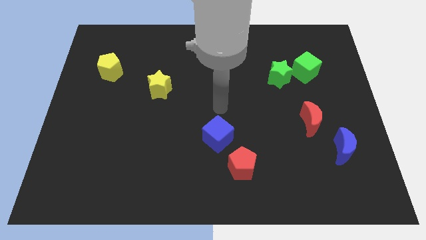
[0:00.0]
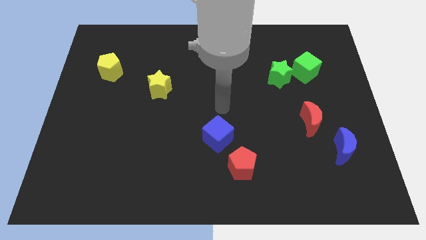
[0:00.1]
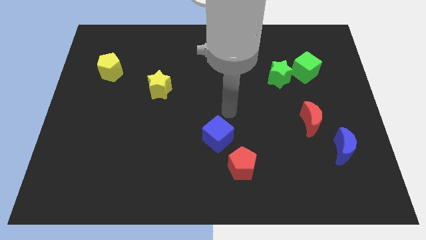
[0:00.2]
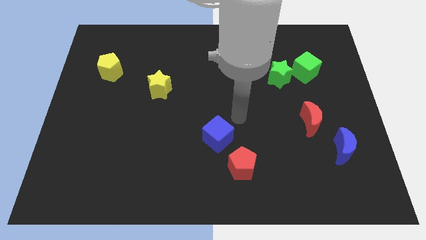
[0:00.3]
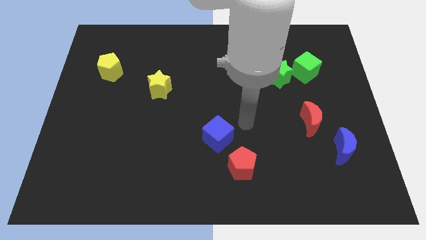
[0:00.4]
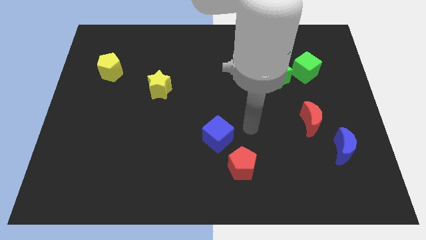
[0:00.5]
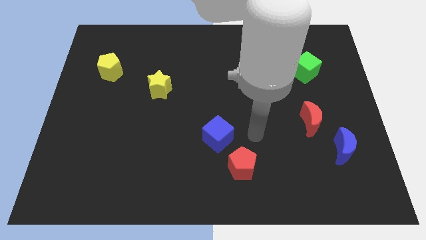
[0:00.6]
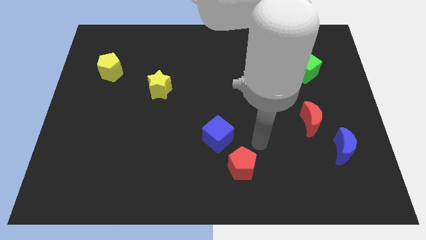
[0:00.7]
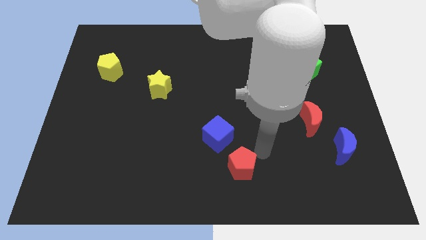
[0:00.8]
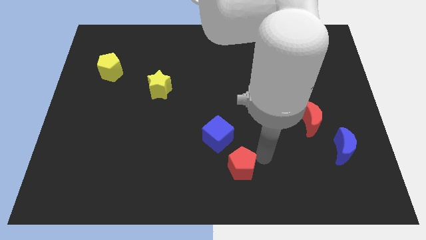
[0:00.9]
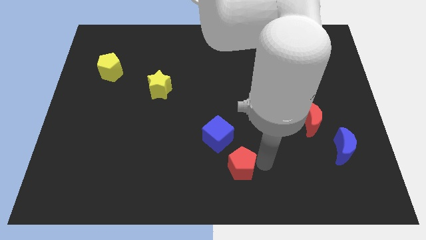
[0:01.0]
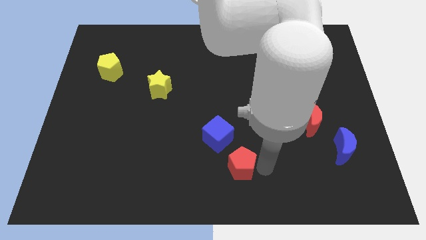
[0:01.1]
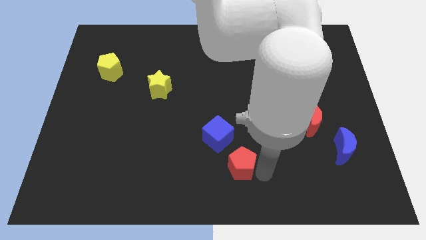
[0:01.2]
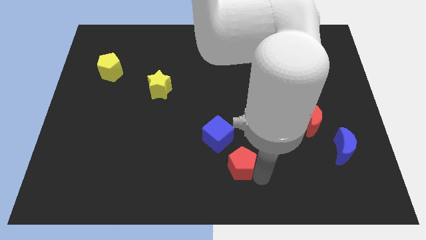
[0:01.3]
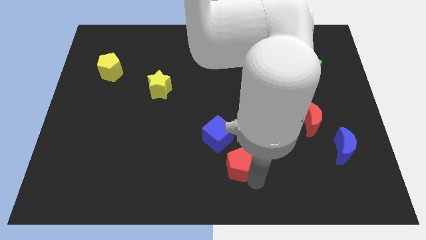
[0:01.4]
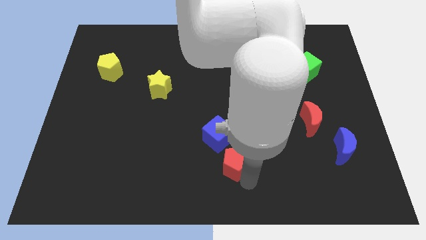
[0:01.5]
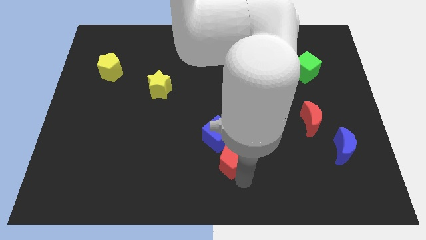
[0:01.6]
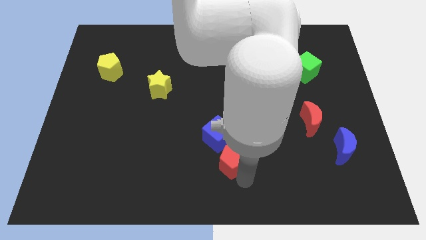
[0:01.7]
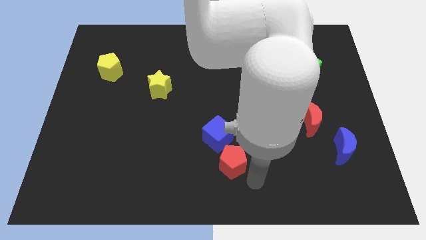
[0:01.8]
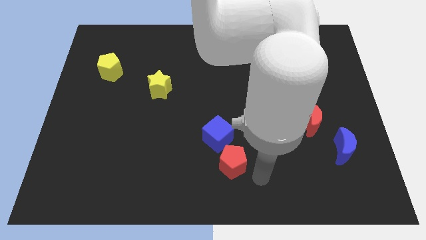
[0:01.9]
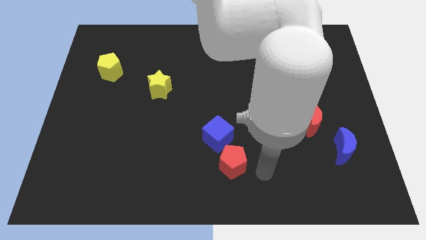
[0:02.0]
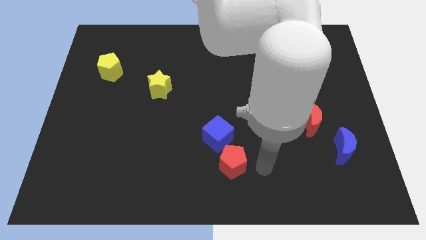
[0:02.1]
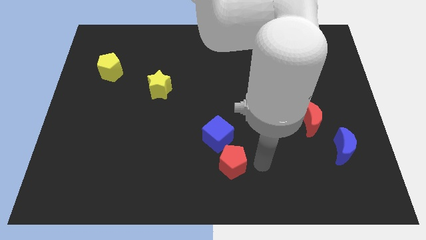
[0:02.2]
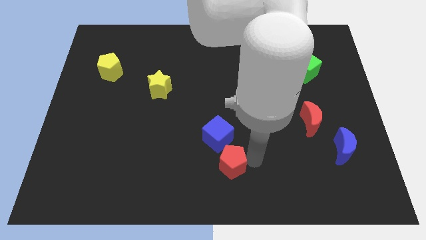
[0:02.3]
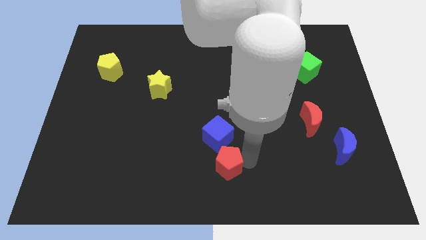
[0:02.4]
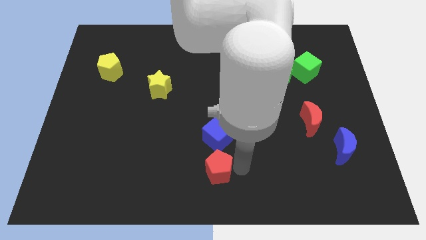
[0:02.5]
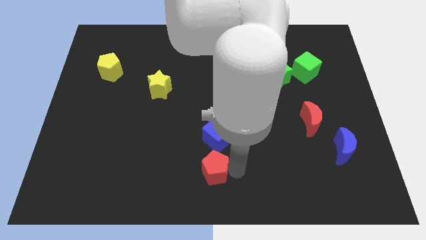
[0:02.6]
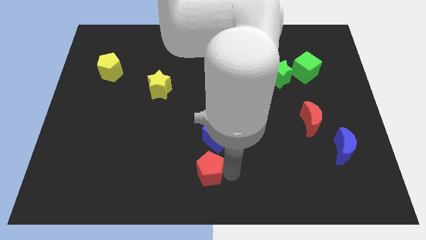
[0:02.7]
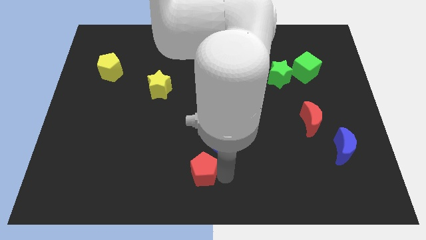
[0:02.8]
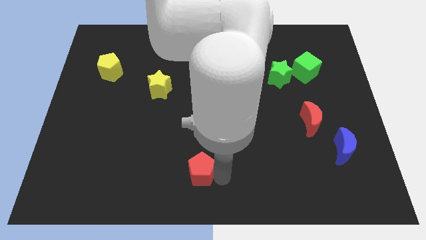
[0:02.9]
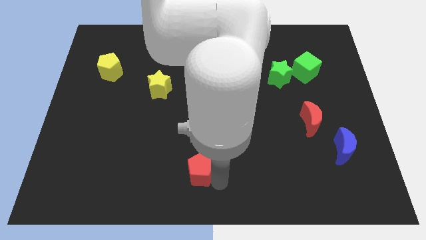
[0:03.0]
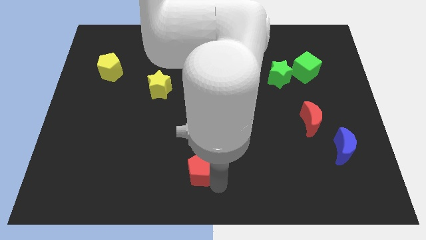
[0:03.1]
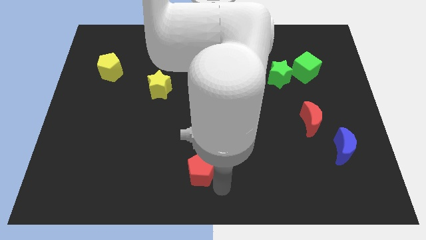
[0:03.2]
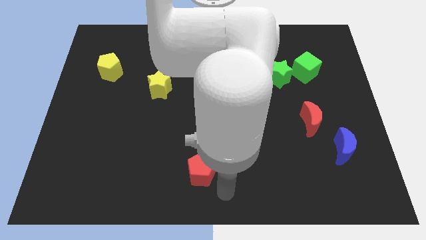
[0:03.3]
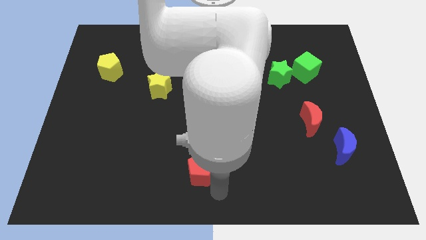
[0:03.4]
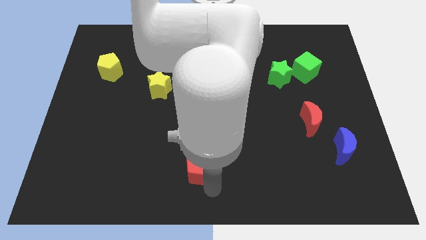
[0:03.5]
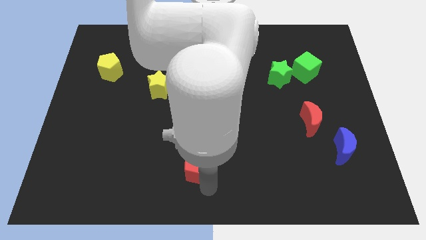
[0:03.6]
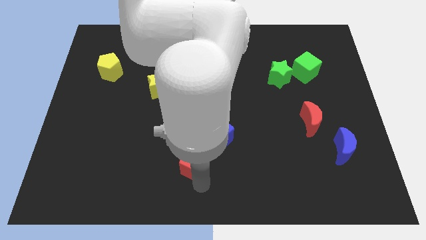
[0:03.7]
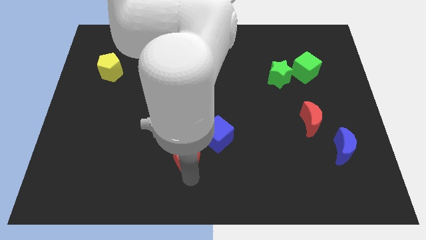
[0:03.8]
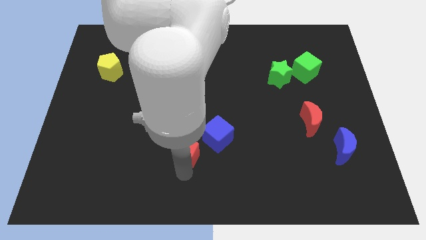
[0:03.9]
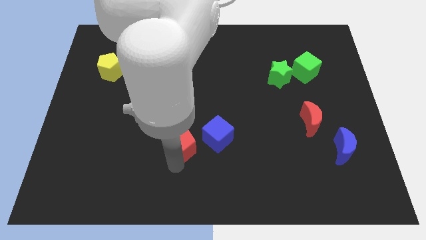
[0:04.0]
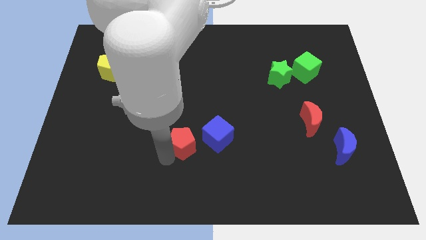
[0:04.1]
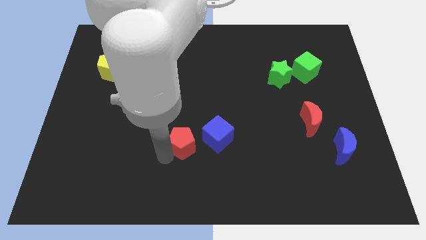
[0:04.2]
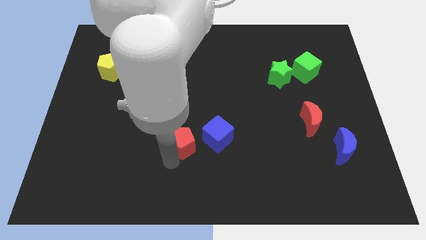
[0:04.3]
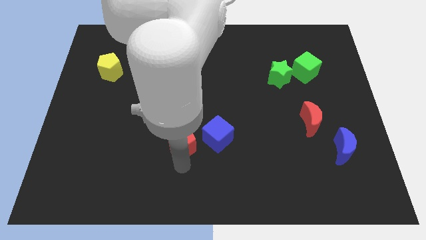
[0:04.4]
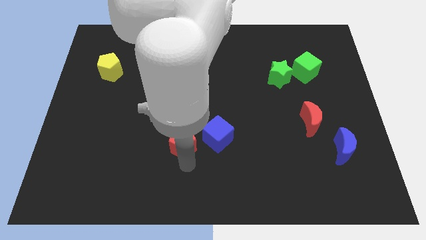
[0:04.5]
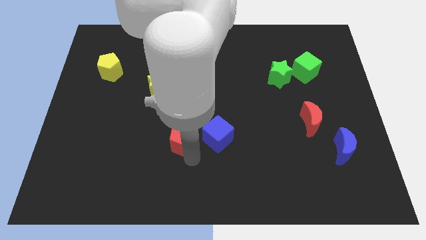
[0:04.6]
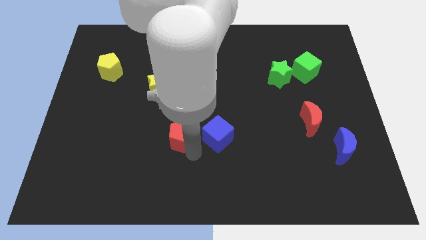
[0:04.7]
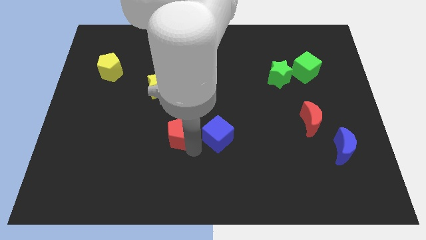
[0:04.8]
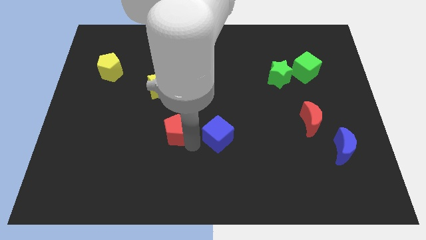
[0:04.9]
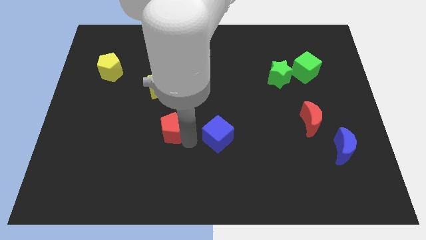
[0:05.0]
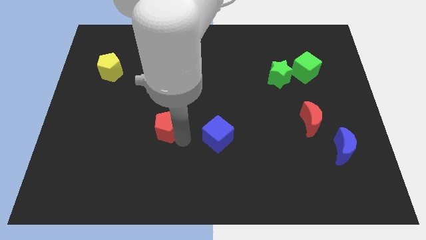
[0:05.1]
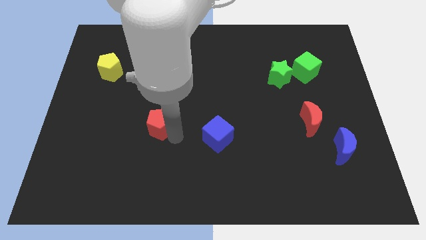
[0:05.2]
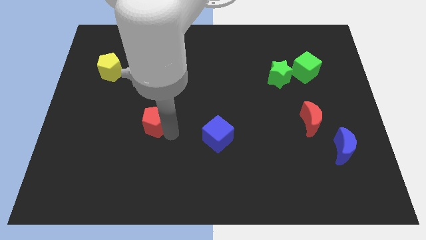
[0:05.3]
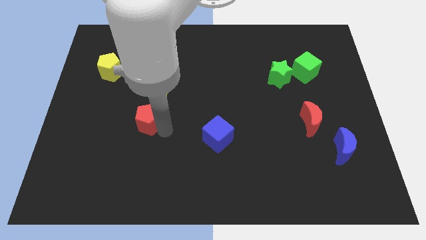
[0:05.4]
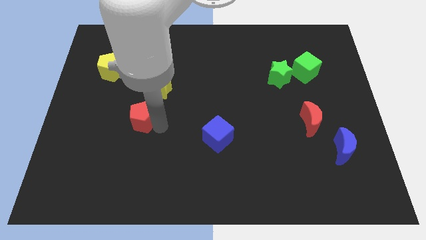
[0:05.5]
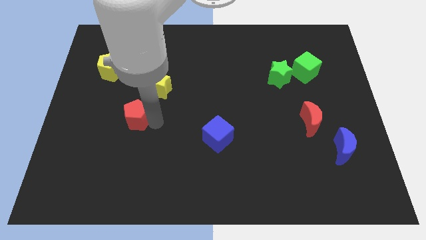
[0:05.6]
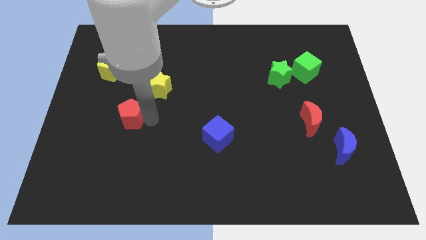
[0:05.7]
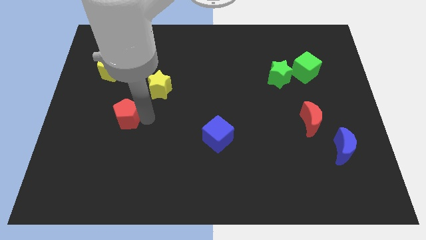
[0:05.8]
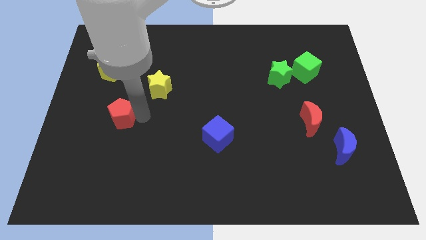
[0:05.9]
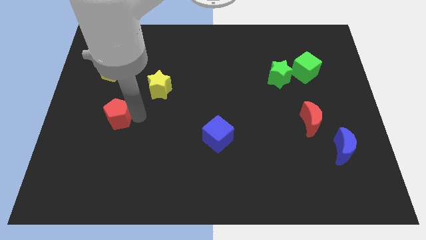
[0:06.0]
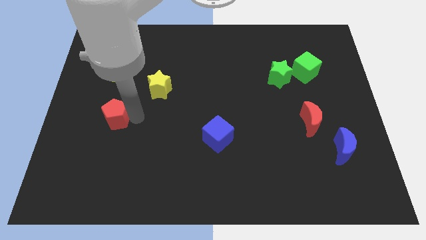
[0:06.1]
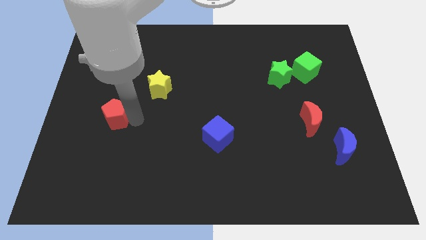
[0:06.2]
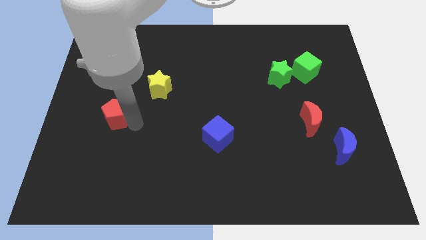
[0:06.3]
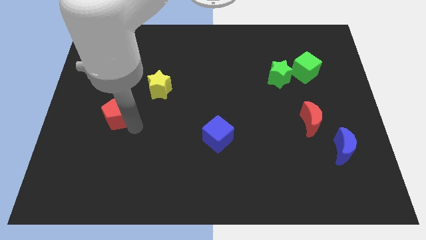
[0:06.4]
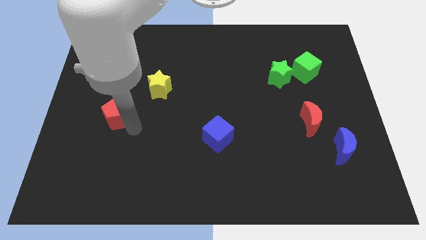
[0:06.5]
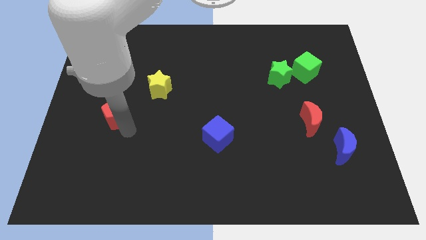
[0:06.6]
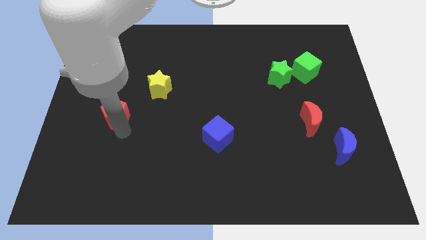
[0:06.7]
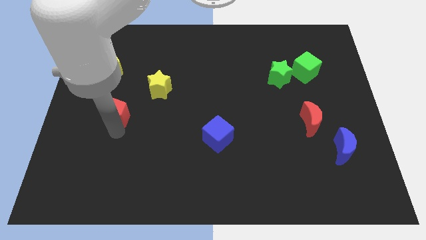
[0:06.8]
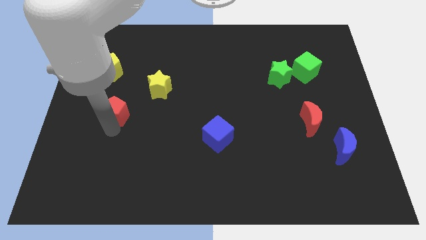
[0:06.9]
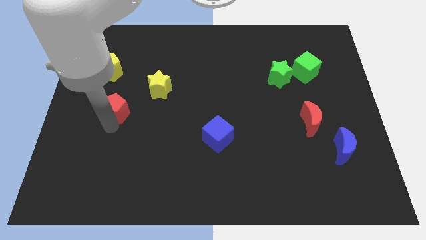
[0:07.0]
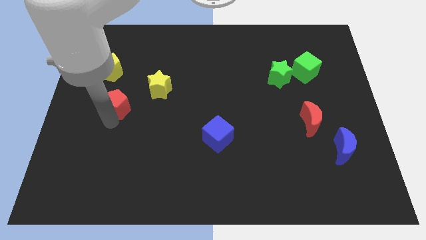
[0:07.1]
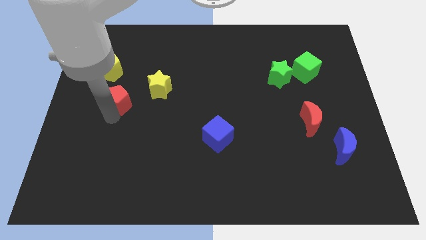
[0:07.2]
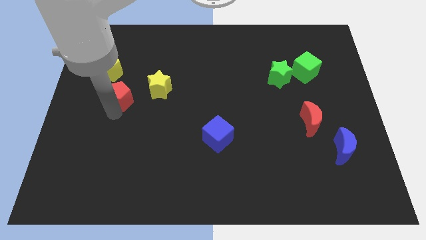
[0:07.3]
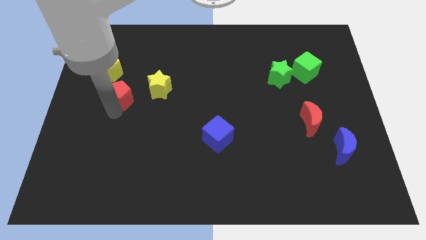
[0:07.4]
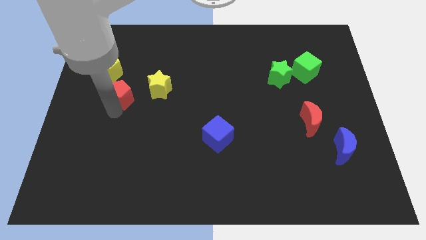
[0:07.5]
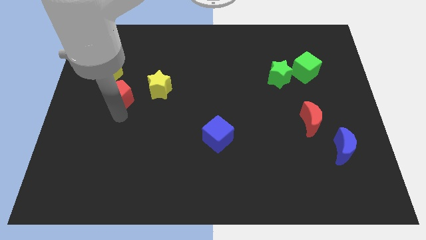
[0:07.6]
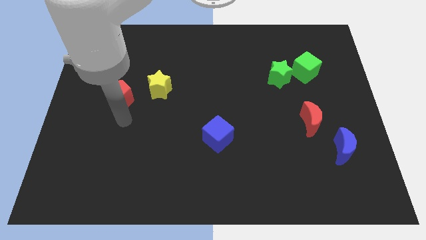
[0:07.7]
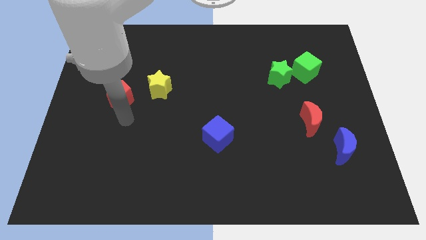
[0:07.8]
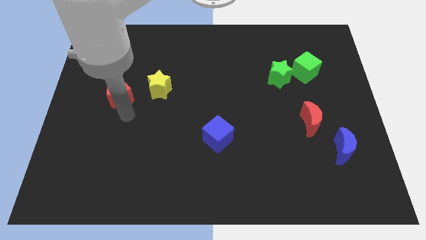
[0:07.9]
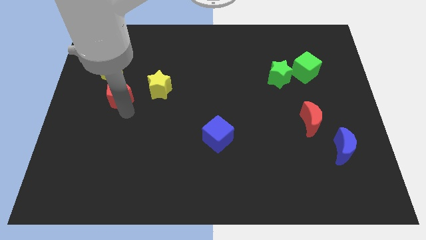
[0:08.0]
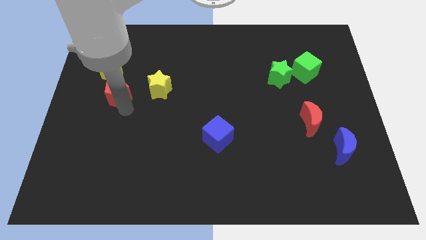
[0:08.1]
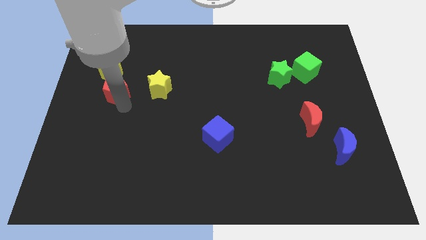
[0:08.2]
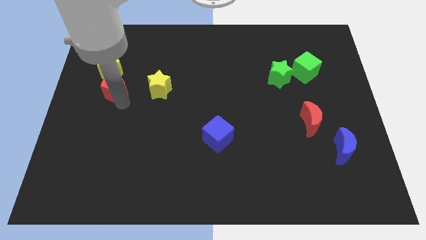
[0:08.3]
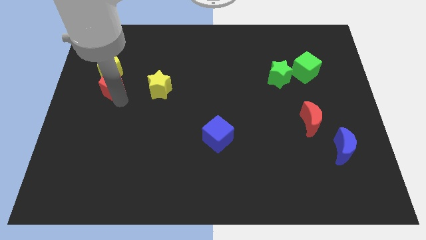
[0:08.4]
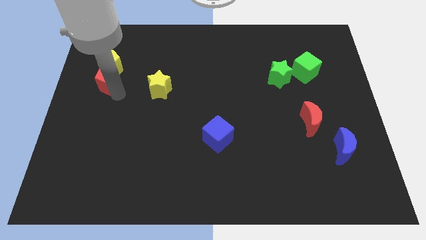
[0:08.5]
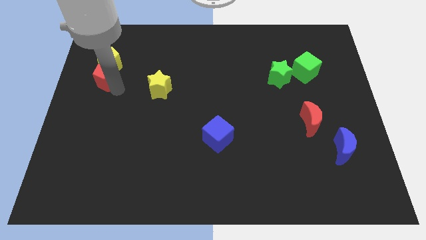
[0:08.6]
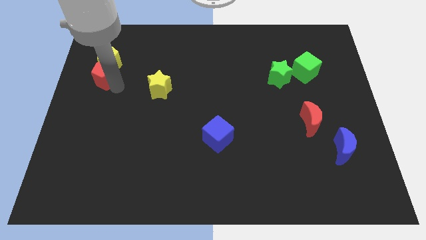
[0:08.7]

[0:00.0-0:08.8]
slide the red pentagon to the yellow pentagon
